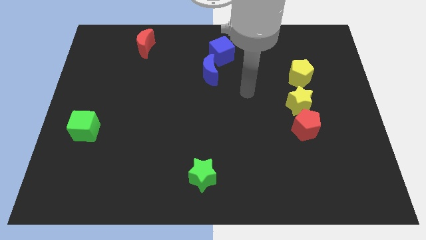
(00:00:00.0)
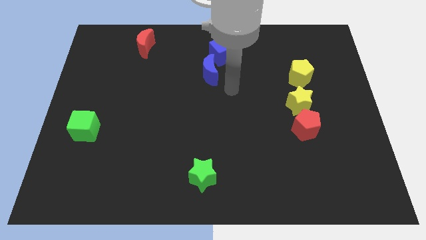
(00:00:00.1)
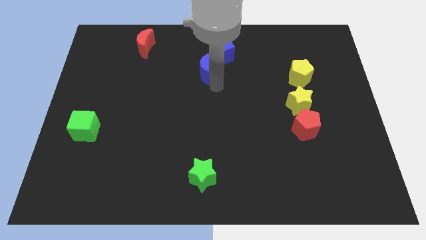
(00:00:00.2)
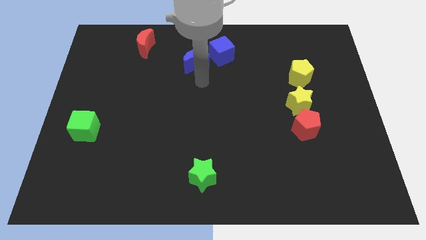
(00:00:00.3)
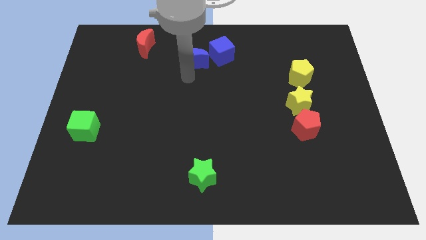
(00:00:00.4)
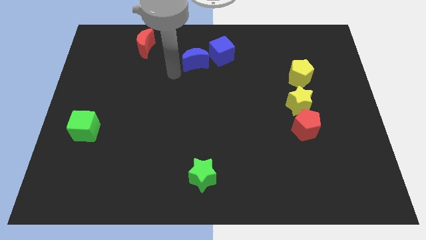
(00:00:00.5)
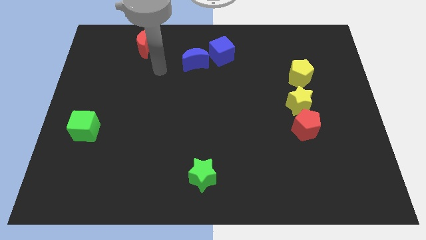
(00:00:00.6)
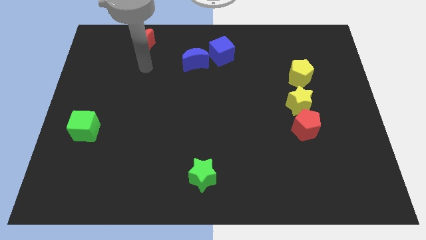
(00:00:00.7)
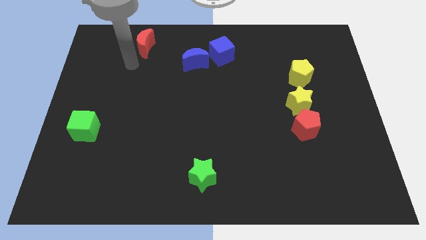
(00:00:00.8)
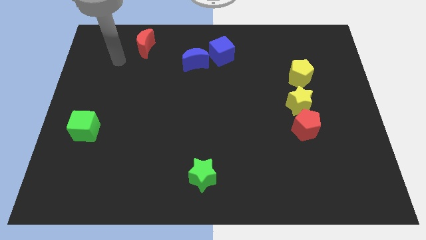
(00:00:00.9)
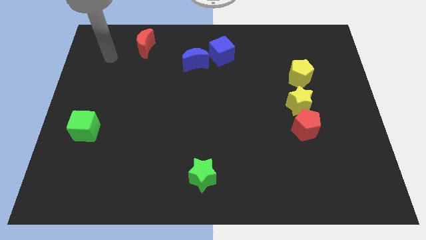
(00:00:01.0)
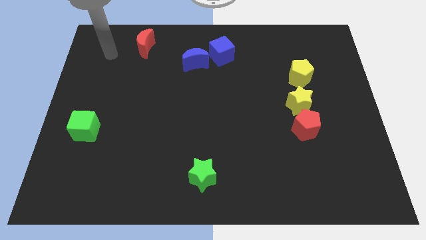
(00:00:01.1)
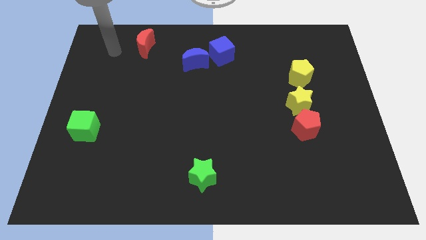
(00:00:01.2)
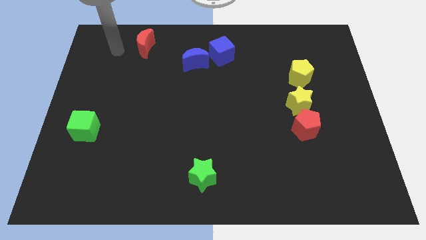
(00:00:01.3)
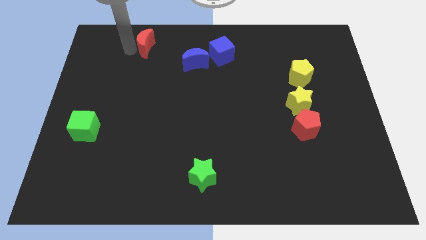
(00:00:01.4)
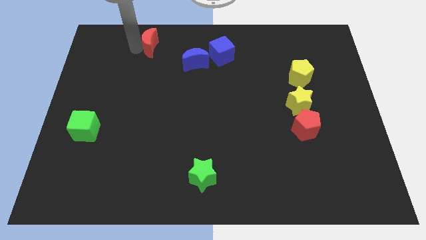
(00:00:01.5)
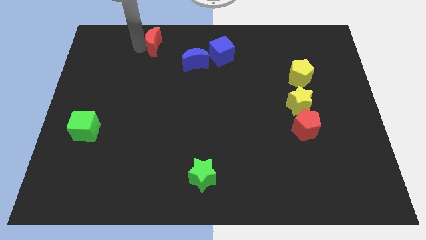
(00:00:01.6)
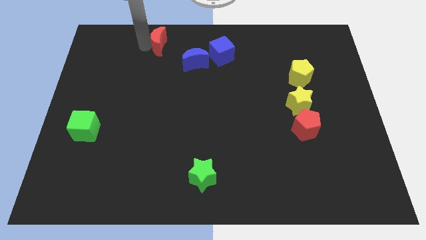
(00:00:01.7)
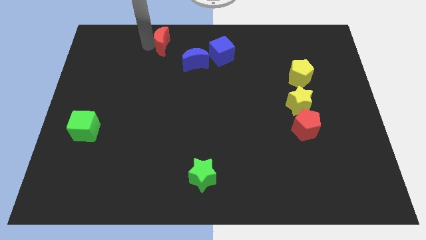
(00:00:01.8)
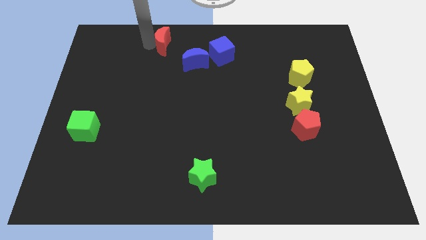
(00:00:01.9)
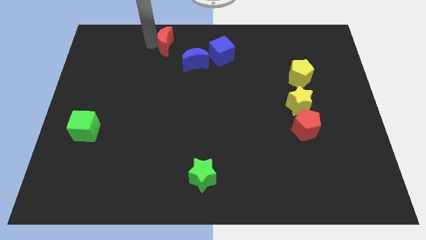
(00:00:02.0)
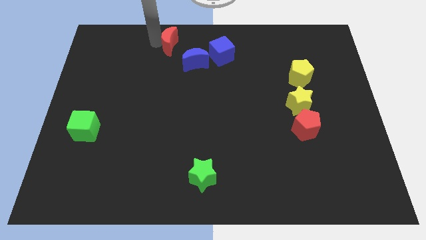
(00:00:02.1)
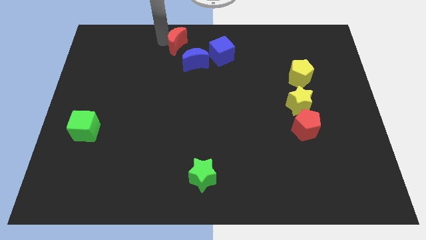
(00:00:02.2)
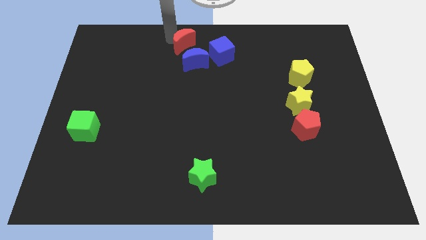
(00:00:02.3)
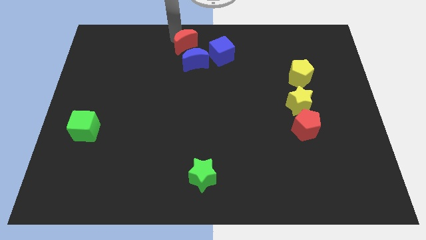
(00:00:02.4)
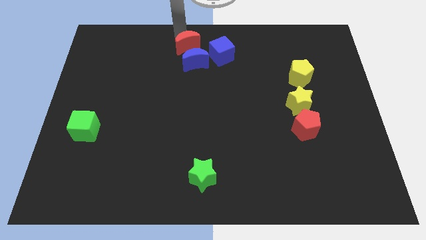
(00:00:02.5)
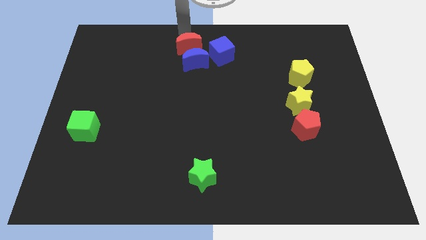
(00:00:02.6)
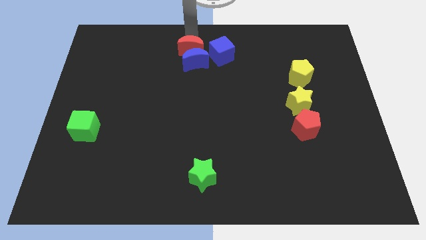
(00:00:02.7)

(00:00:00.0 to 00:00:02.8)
put red moon above blue crescent

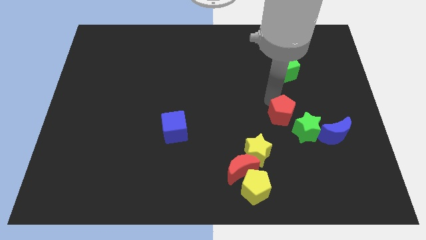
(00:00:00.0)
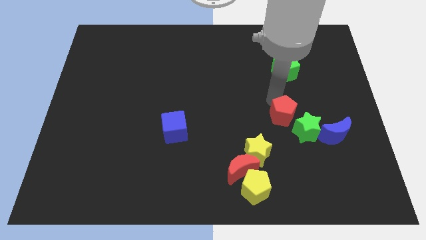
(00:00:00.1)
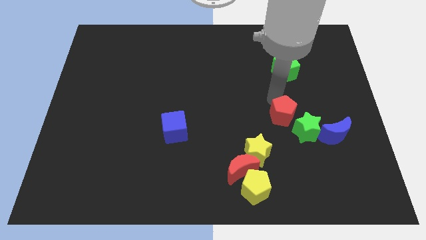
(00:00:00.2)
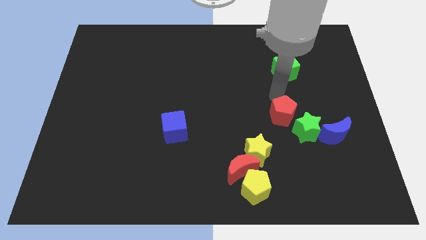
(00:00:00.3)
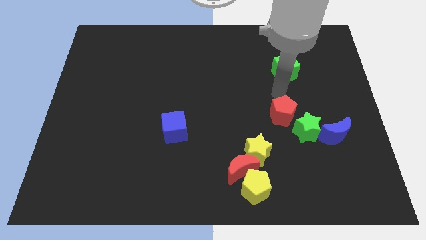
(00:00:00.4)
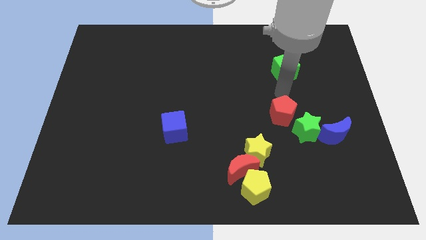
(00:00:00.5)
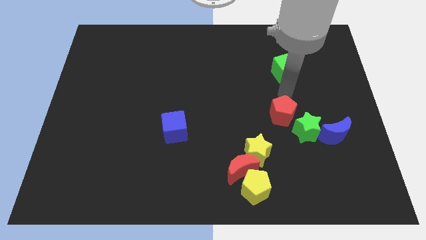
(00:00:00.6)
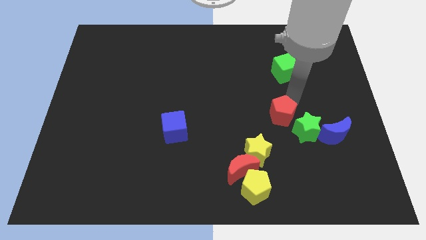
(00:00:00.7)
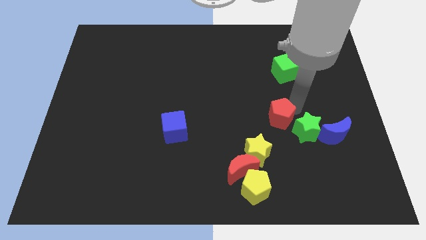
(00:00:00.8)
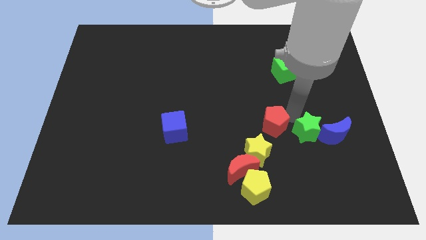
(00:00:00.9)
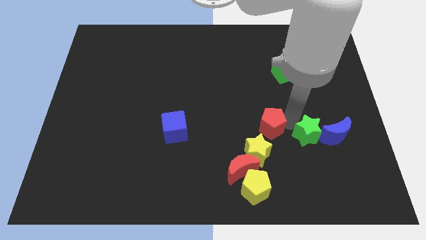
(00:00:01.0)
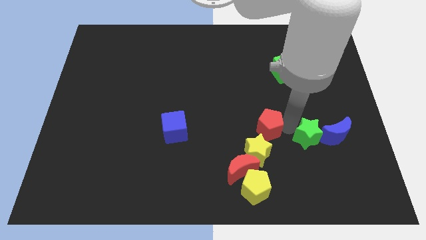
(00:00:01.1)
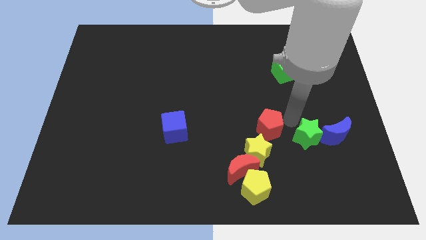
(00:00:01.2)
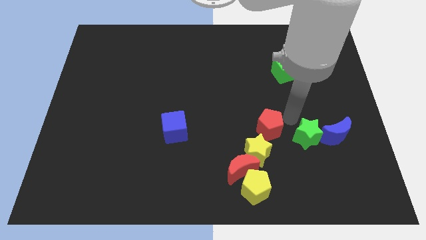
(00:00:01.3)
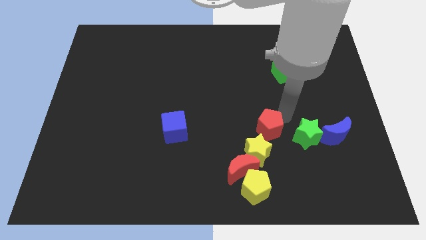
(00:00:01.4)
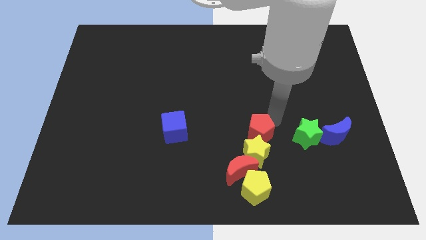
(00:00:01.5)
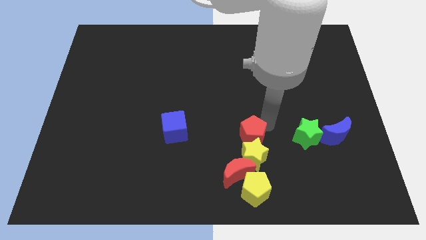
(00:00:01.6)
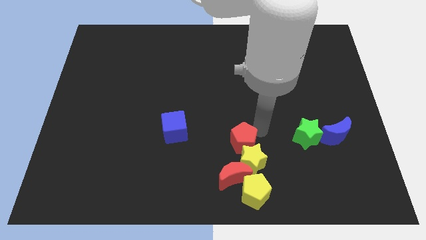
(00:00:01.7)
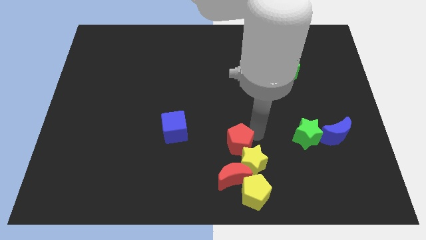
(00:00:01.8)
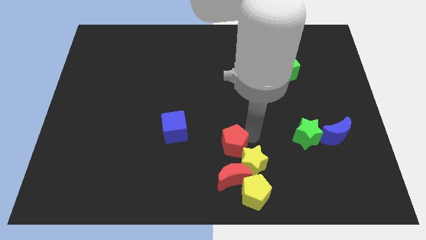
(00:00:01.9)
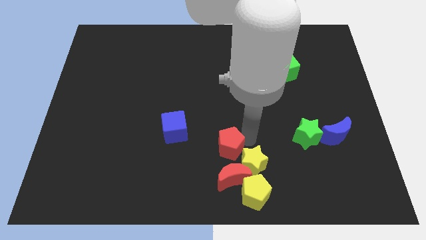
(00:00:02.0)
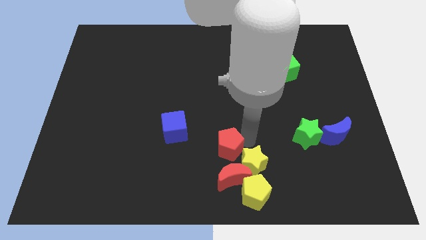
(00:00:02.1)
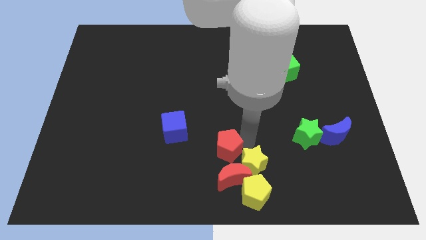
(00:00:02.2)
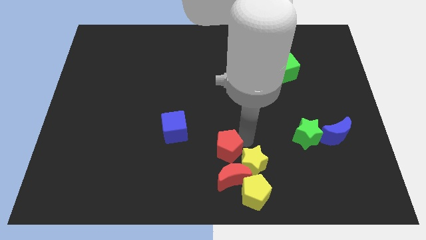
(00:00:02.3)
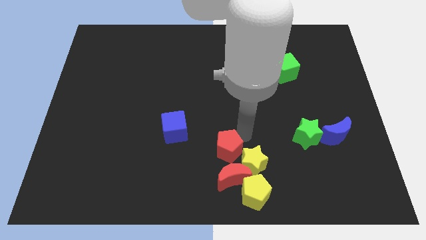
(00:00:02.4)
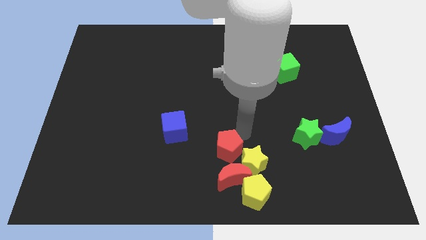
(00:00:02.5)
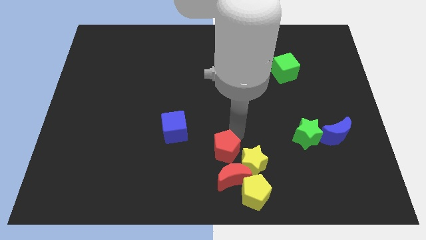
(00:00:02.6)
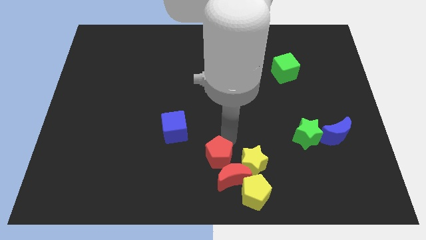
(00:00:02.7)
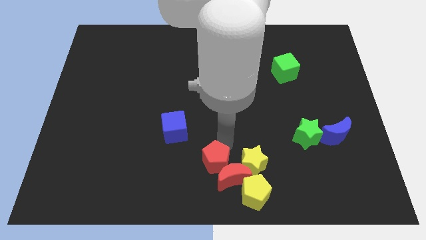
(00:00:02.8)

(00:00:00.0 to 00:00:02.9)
place the red pentagon above the red moon

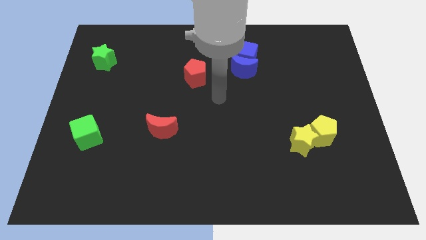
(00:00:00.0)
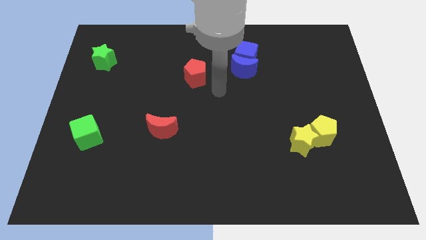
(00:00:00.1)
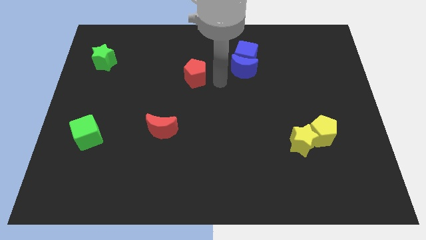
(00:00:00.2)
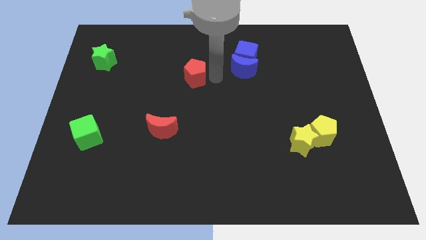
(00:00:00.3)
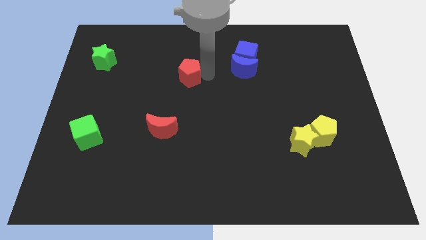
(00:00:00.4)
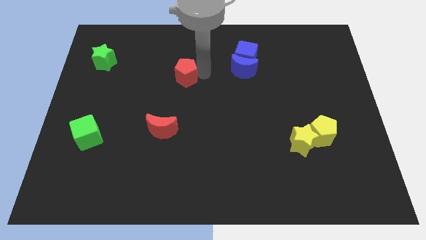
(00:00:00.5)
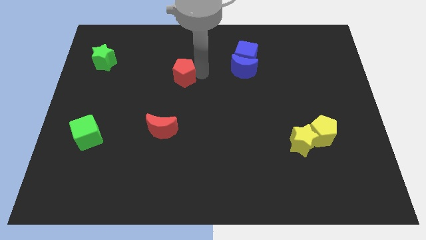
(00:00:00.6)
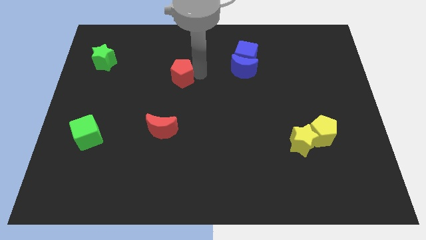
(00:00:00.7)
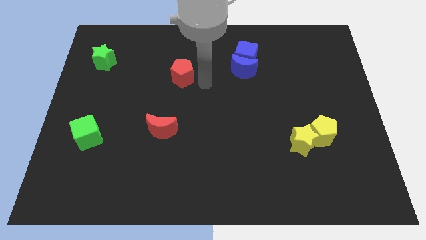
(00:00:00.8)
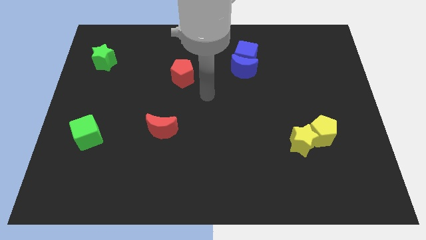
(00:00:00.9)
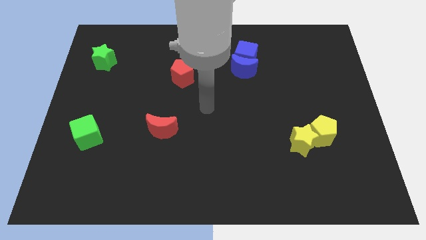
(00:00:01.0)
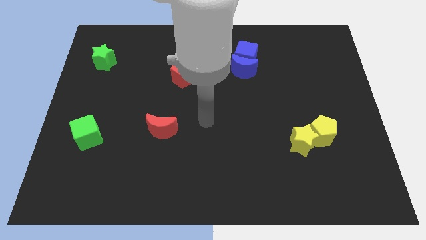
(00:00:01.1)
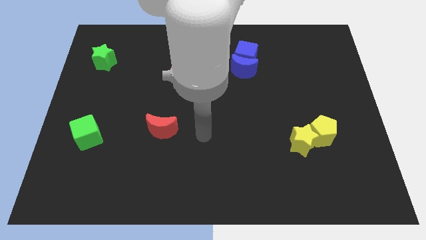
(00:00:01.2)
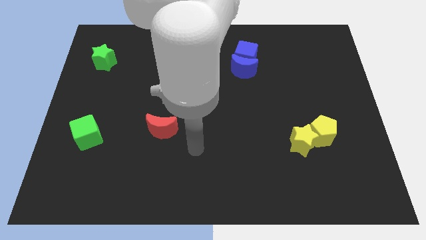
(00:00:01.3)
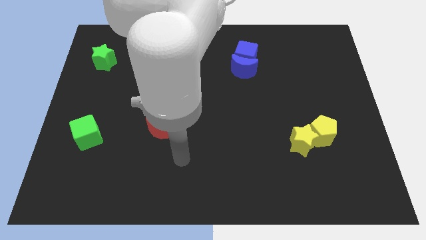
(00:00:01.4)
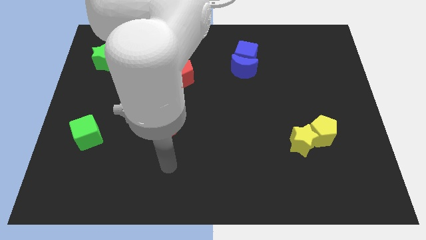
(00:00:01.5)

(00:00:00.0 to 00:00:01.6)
move the red pentagon slightly to the left

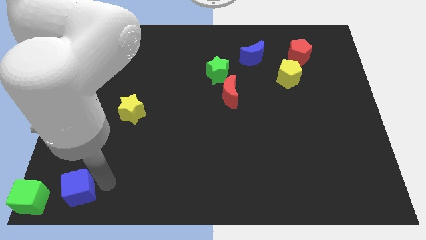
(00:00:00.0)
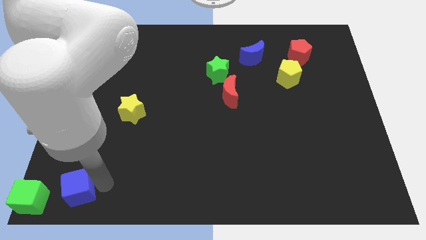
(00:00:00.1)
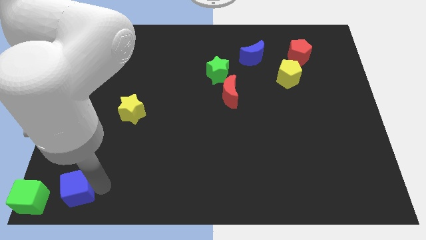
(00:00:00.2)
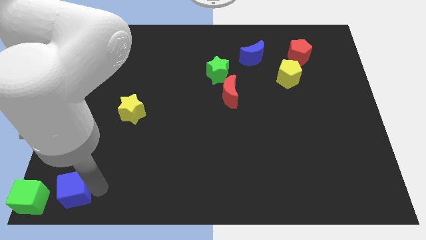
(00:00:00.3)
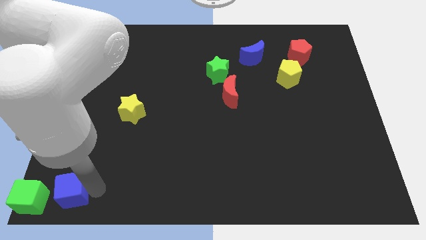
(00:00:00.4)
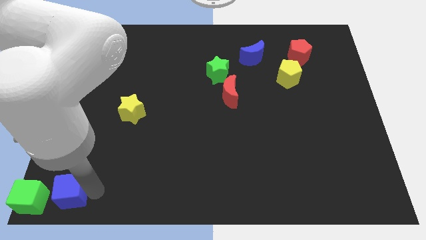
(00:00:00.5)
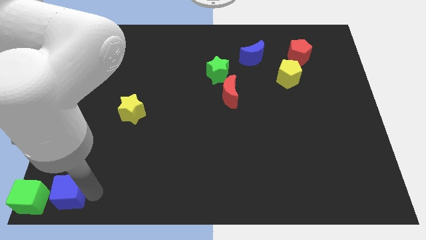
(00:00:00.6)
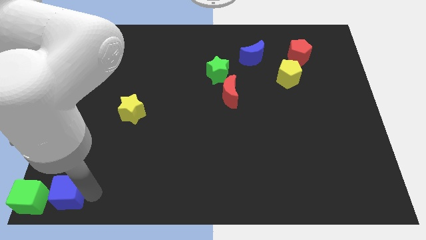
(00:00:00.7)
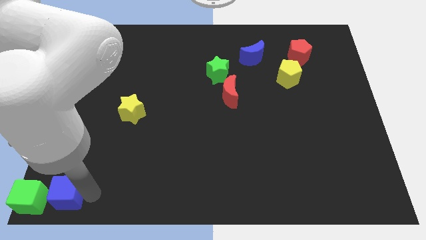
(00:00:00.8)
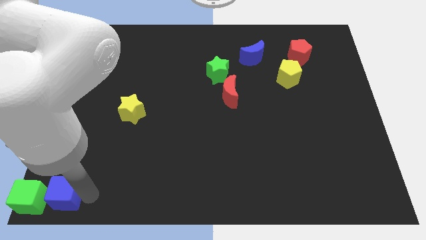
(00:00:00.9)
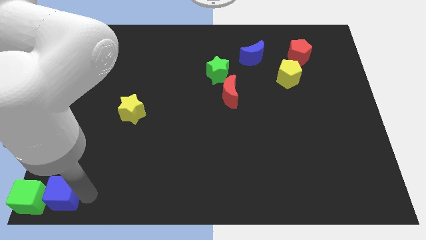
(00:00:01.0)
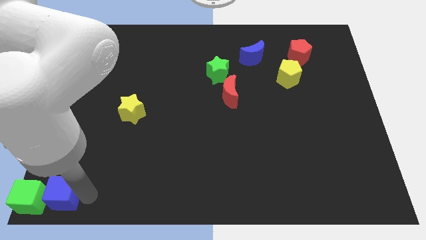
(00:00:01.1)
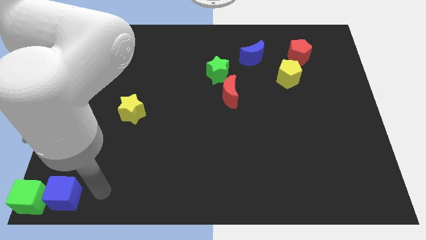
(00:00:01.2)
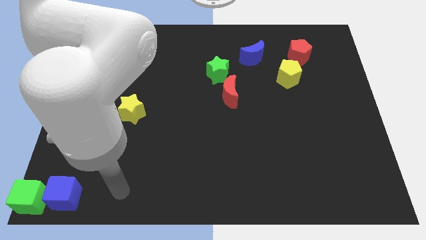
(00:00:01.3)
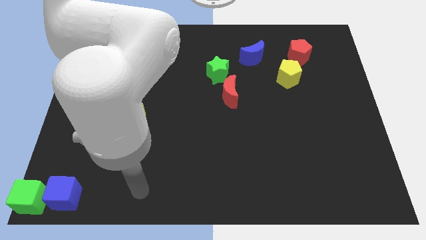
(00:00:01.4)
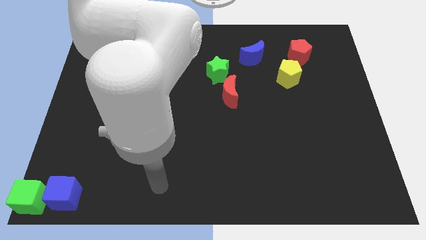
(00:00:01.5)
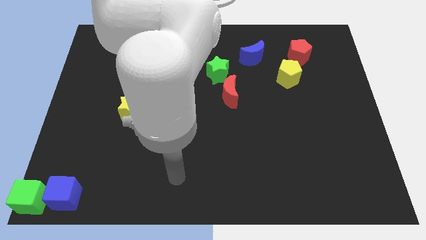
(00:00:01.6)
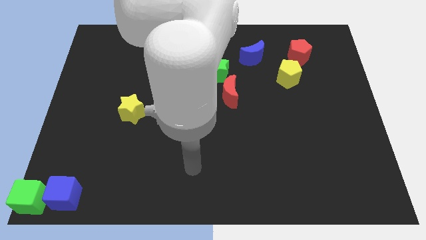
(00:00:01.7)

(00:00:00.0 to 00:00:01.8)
push the blue cube to the right of the green cube
